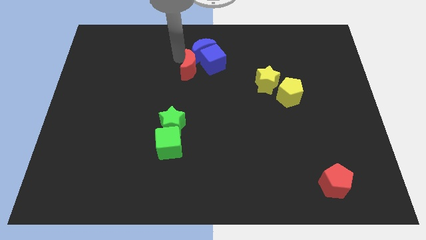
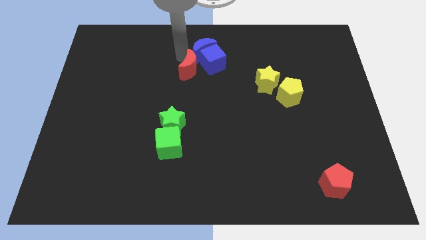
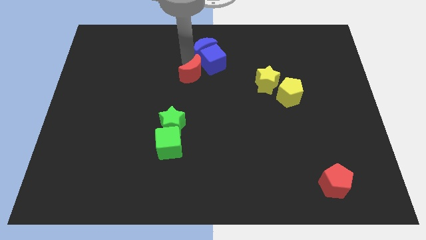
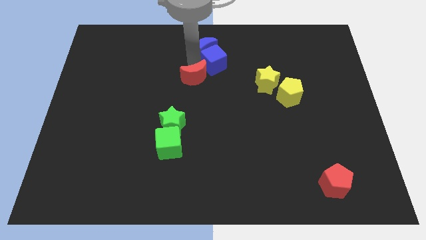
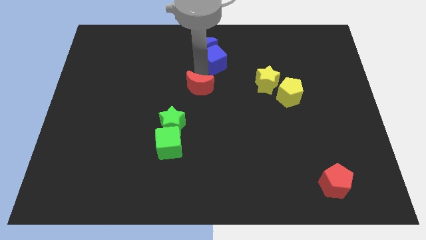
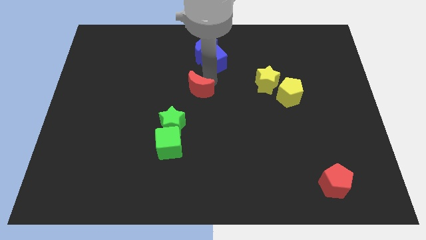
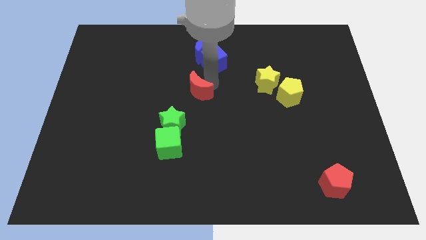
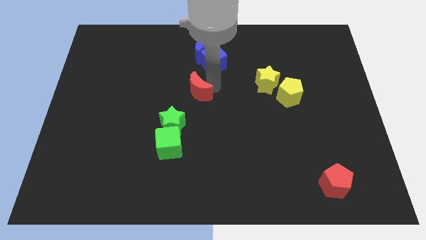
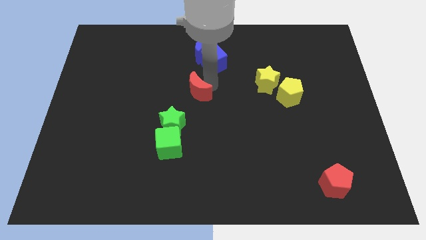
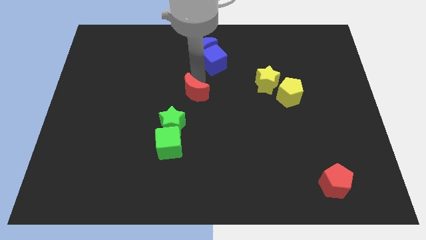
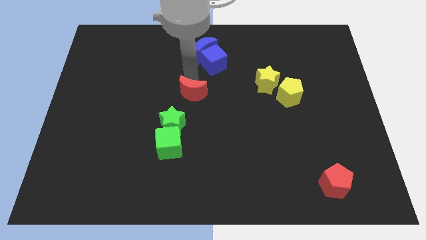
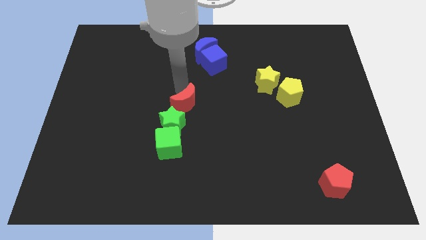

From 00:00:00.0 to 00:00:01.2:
separate the red crescent from the blue blocks

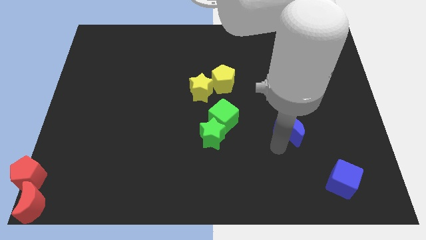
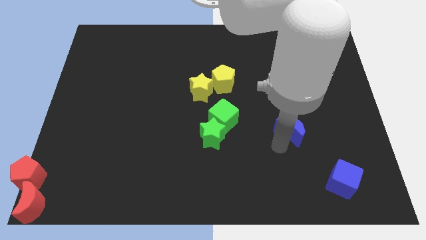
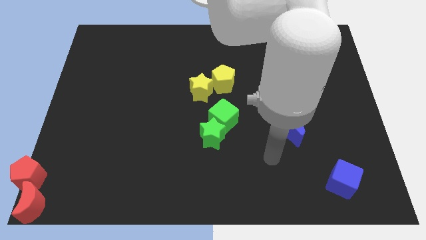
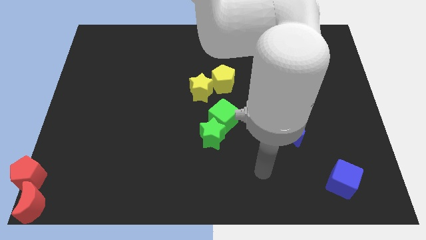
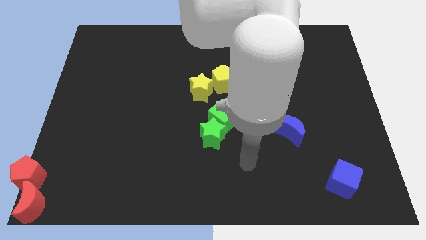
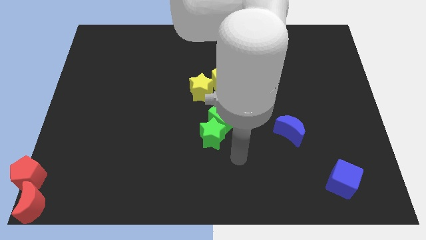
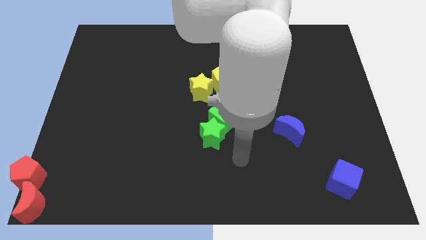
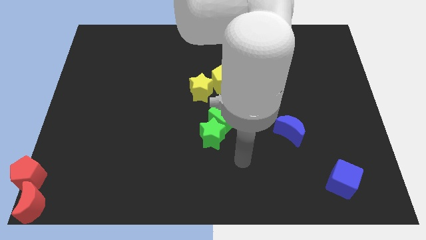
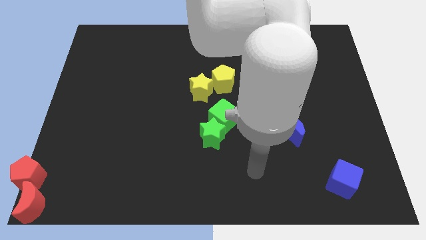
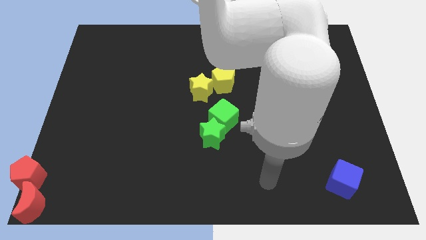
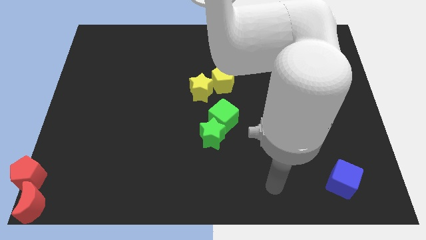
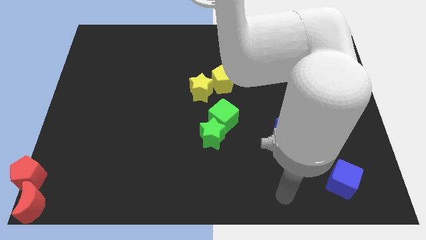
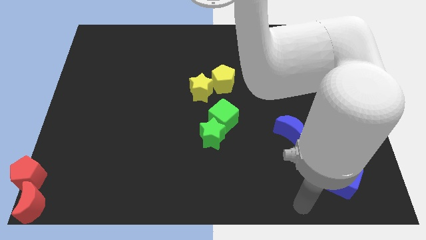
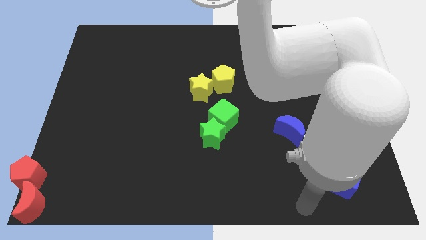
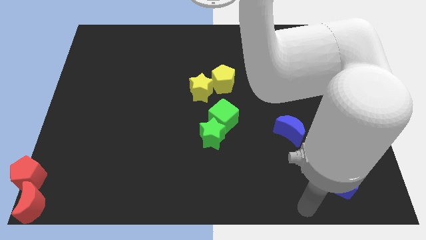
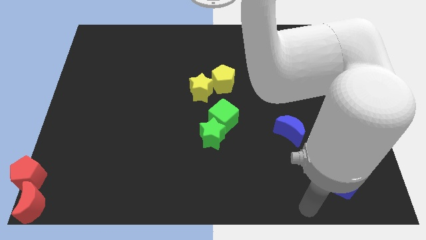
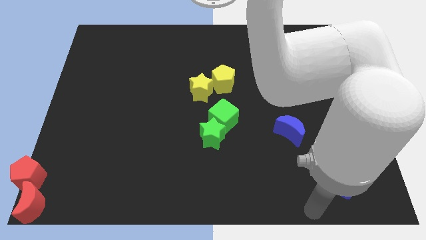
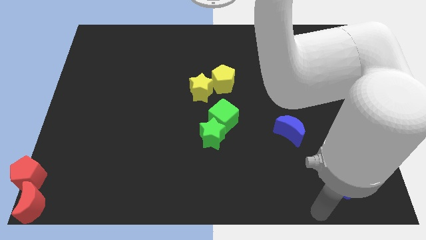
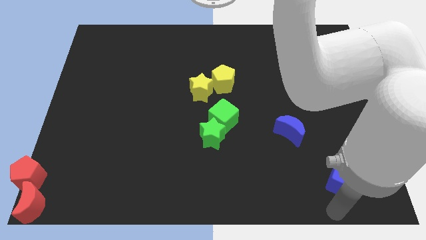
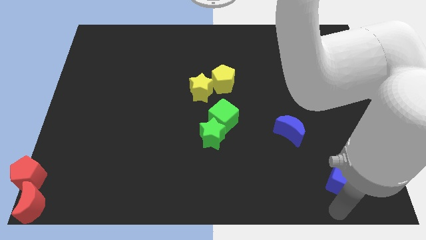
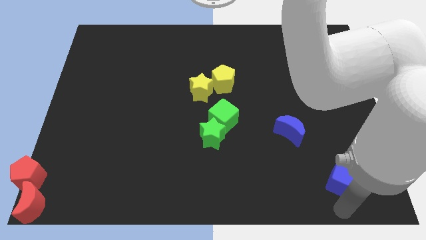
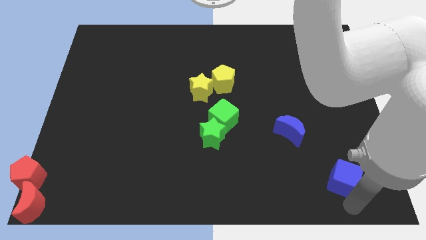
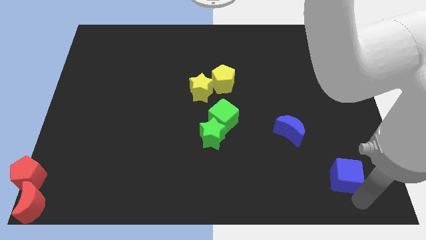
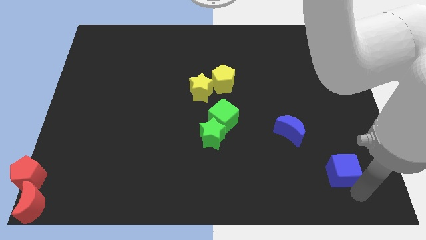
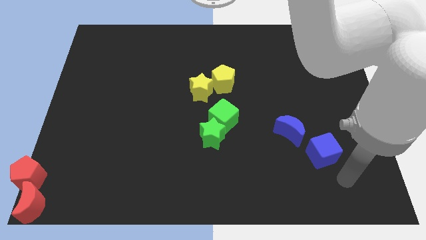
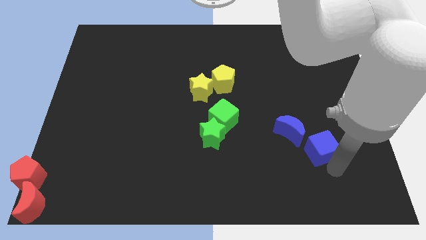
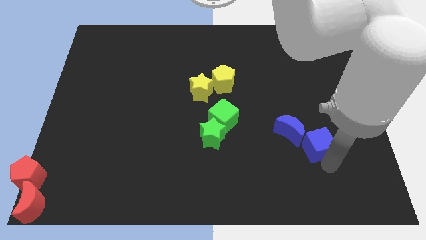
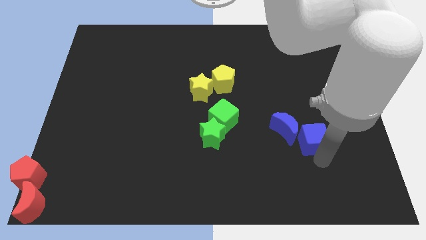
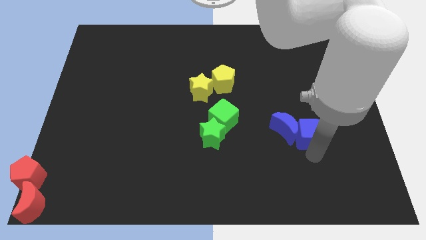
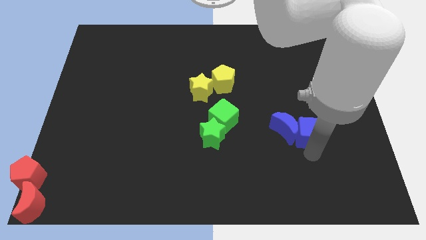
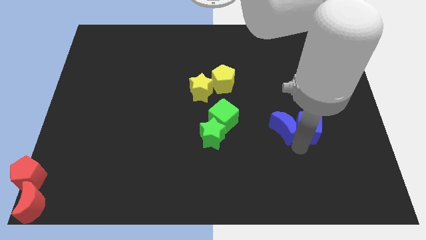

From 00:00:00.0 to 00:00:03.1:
move the blue cube into the right side of the blue crescent

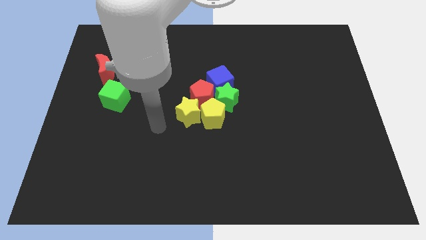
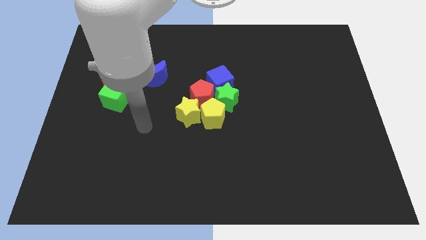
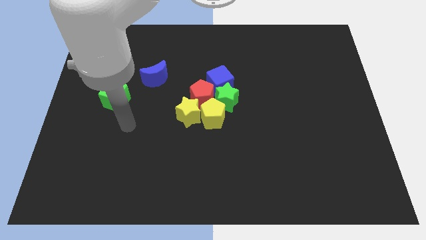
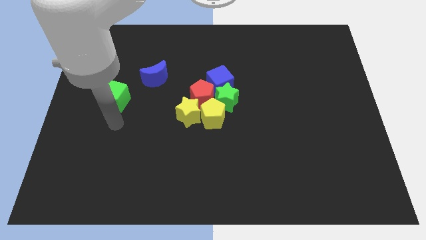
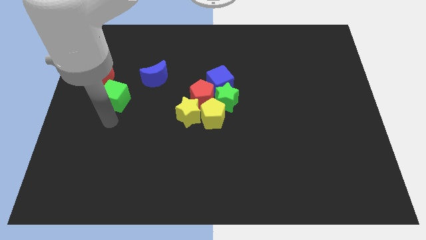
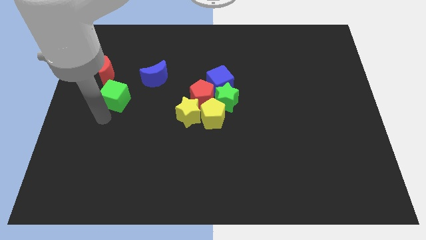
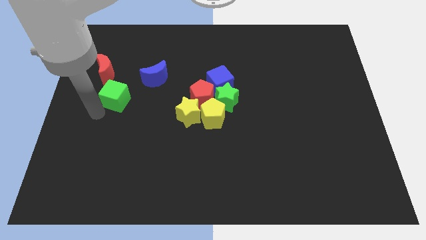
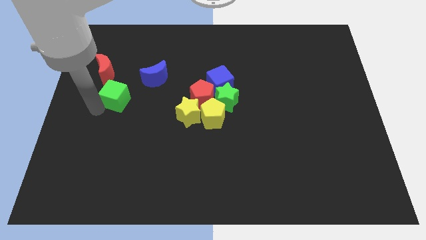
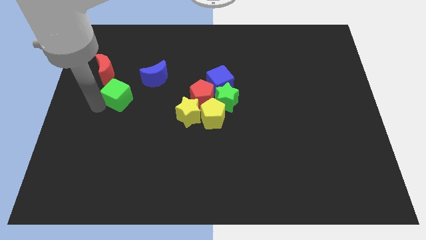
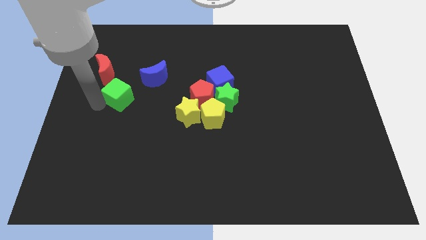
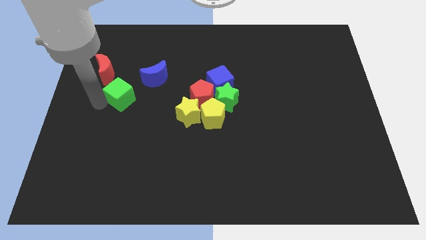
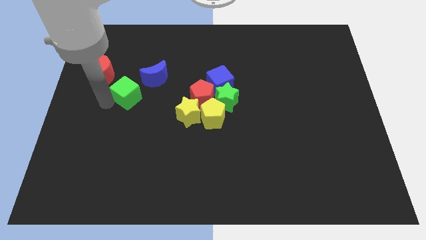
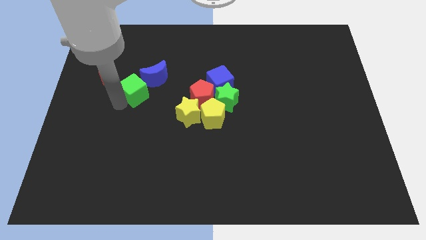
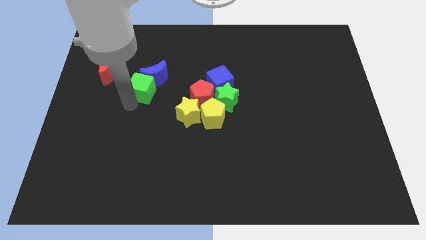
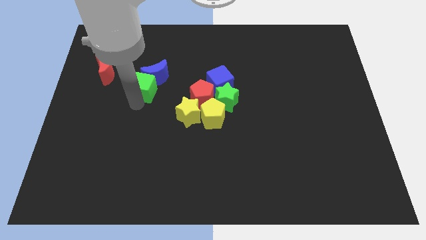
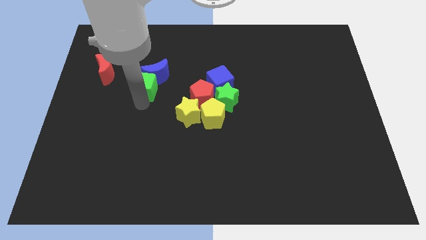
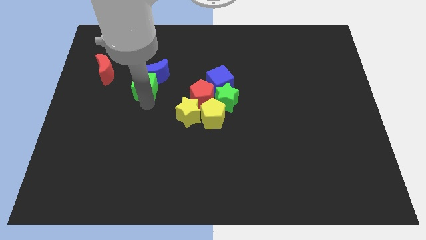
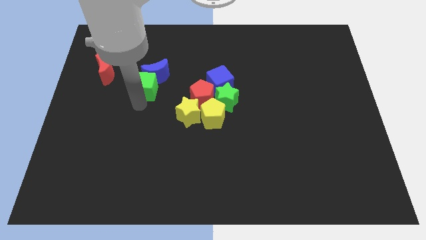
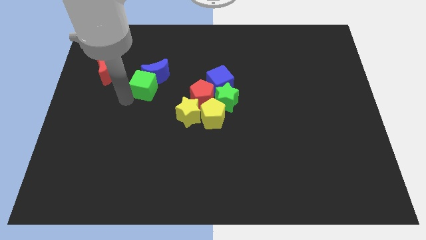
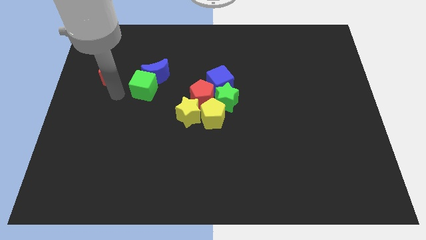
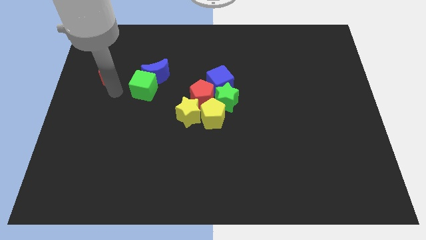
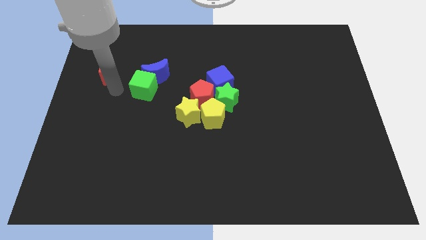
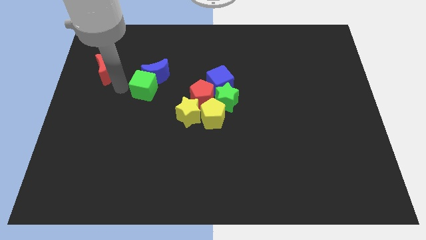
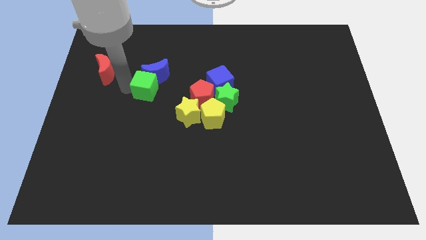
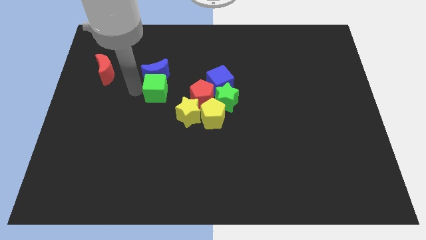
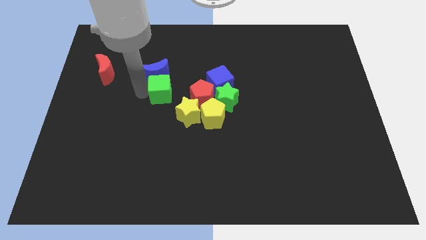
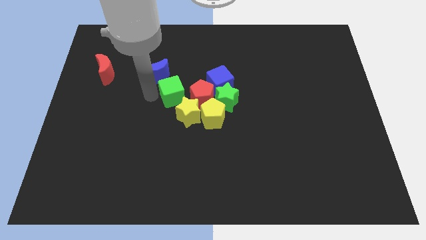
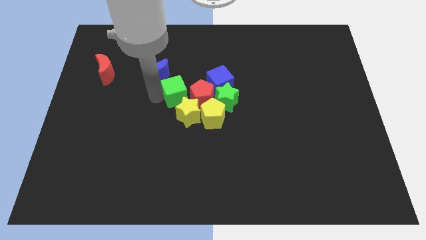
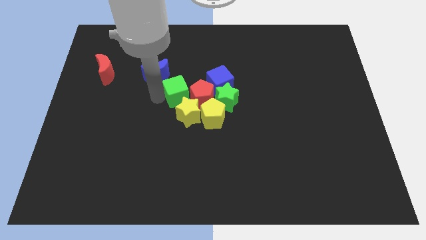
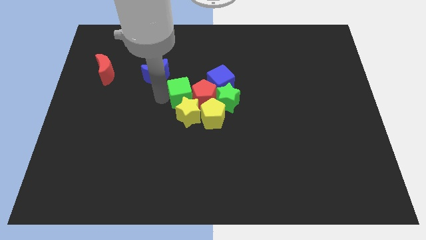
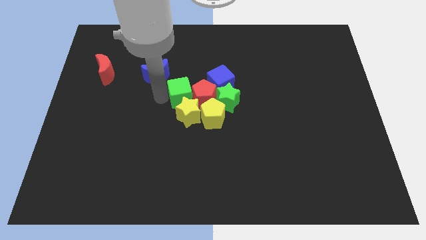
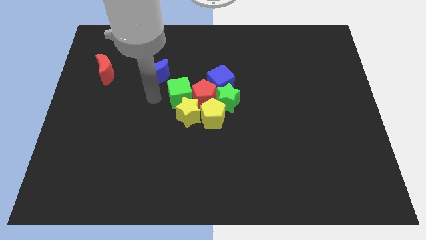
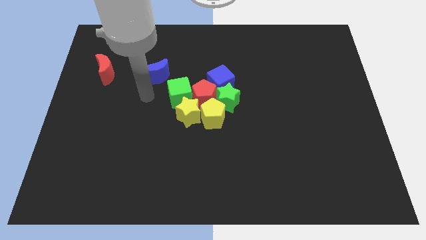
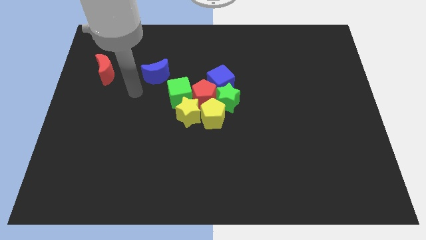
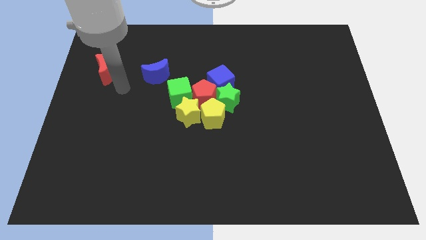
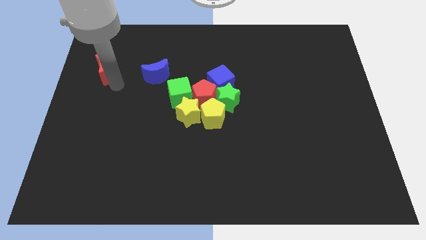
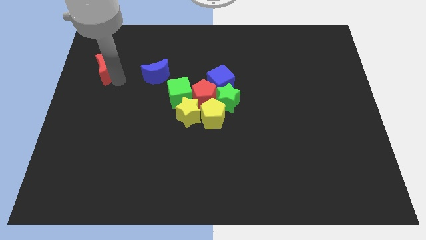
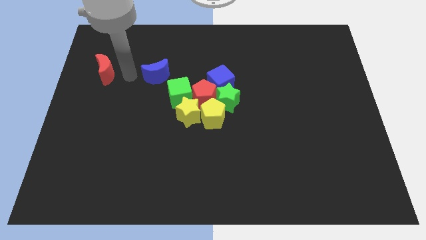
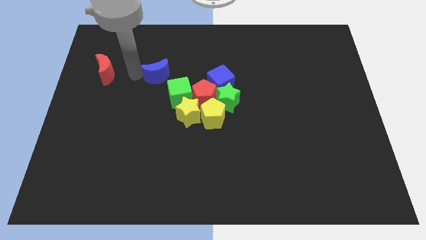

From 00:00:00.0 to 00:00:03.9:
put the green cube left to the red pentagon

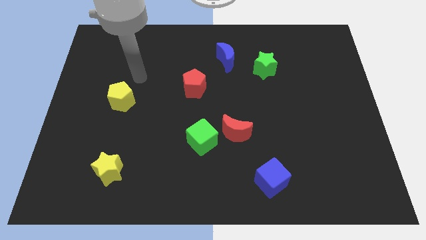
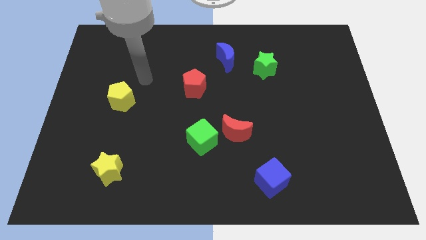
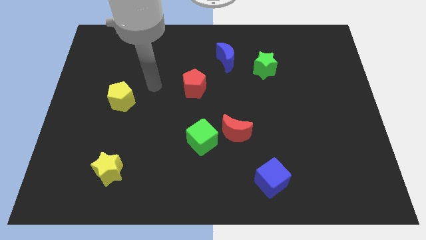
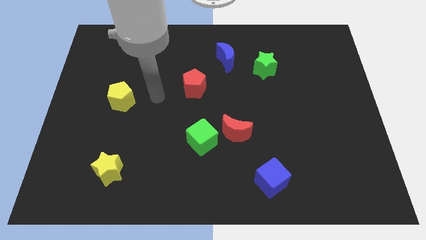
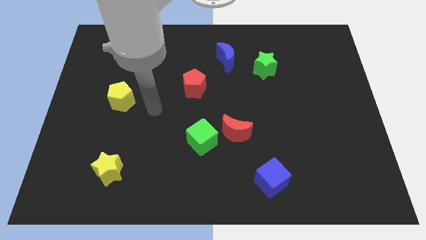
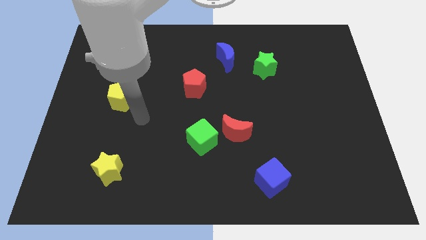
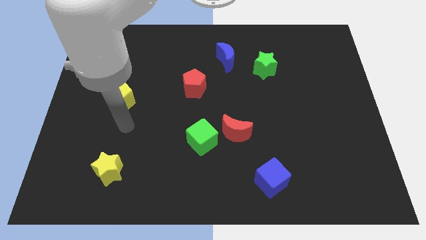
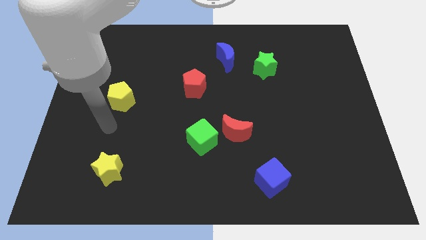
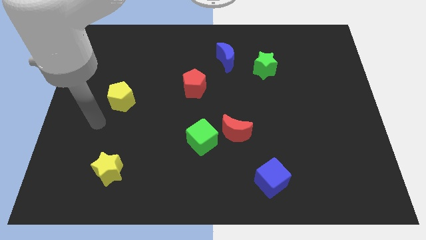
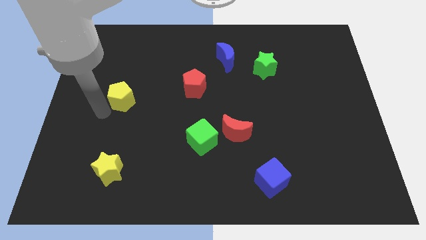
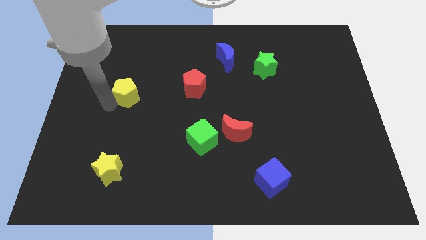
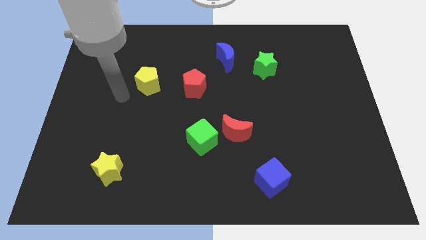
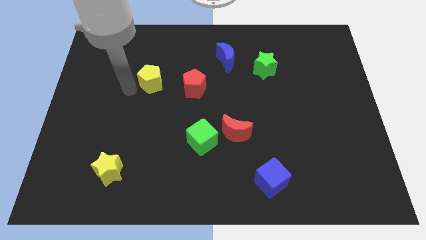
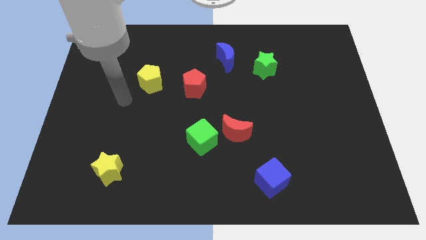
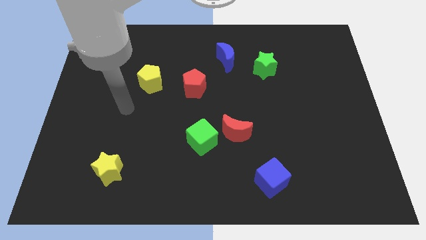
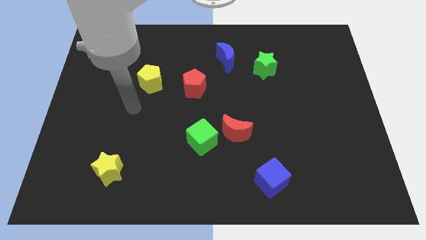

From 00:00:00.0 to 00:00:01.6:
move the yellow pentagon to the left of the red pentagon
